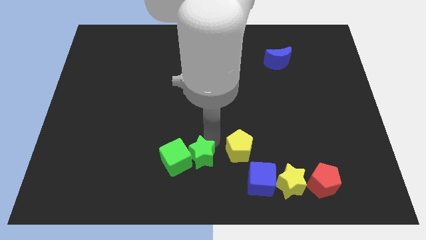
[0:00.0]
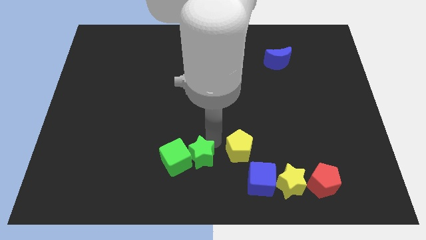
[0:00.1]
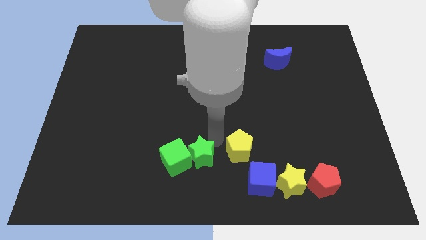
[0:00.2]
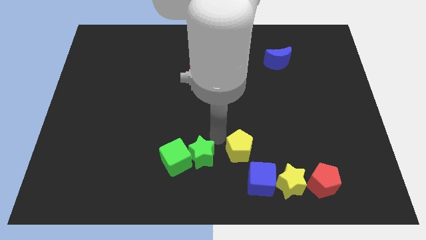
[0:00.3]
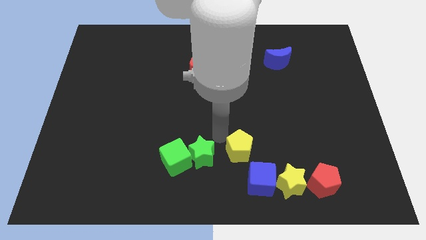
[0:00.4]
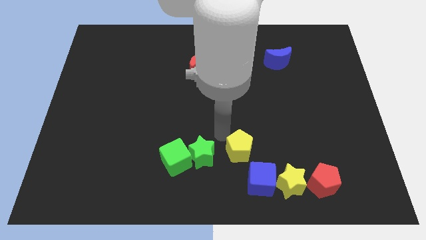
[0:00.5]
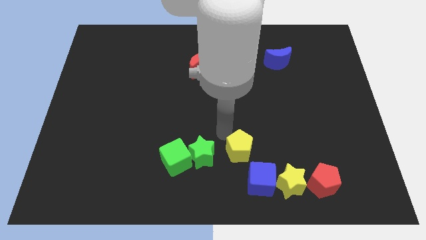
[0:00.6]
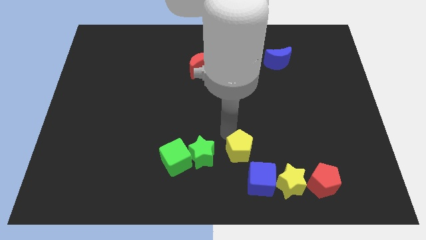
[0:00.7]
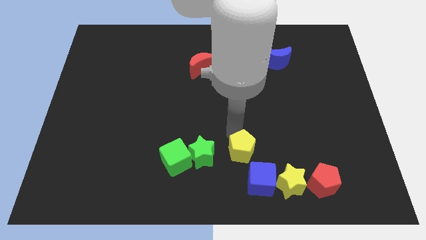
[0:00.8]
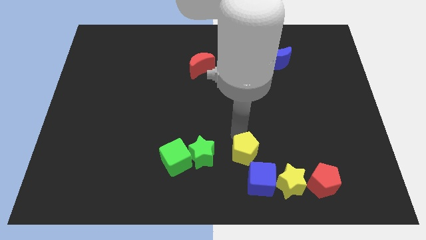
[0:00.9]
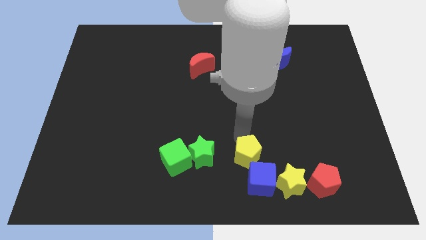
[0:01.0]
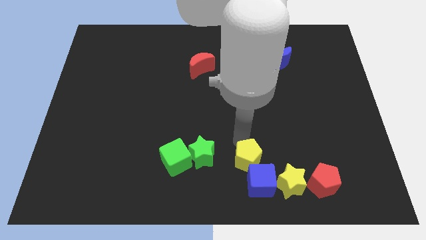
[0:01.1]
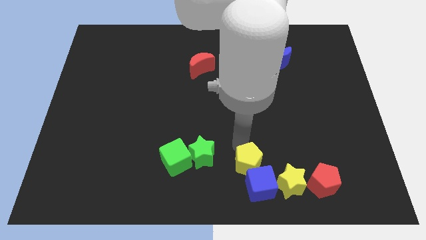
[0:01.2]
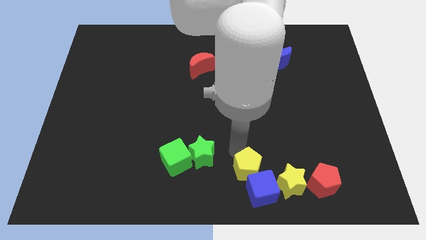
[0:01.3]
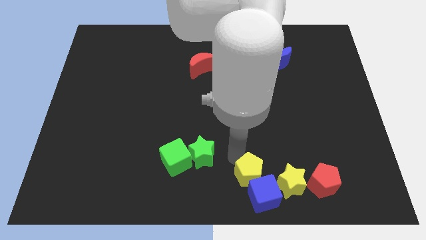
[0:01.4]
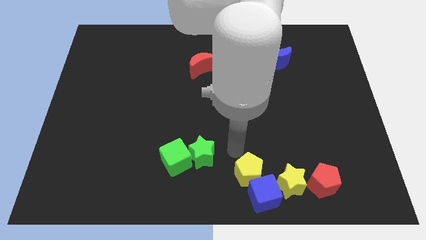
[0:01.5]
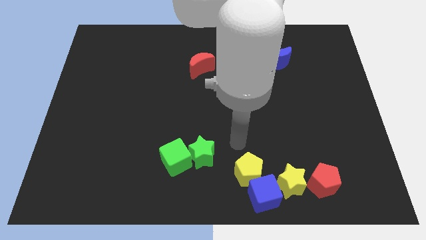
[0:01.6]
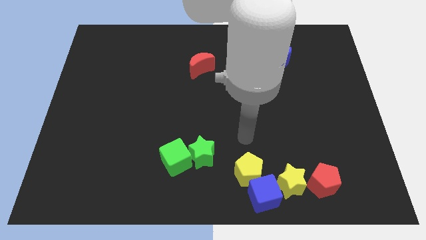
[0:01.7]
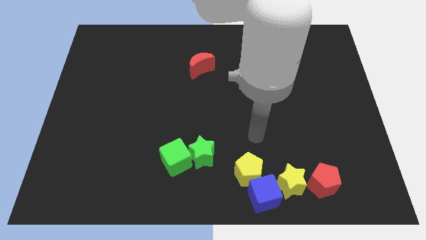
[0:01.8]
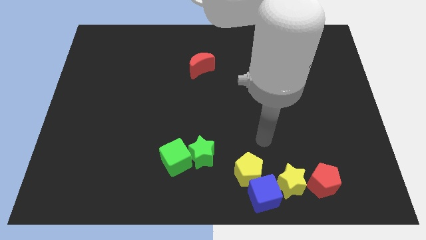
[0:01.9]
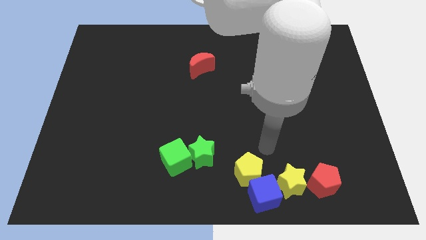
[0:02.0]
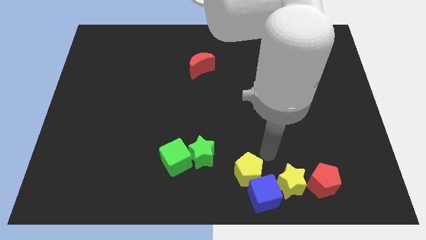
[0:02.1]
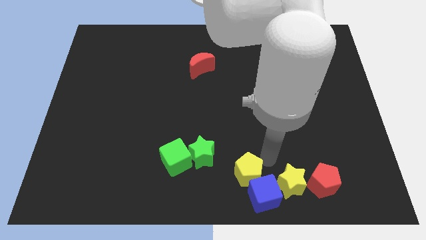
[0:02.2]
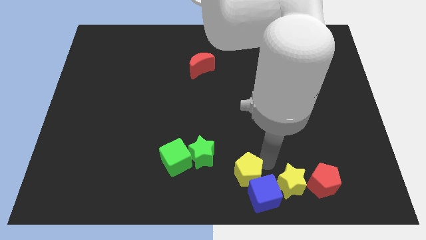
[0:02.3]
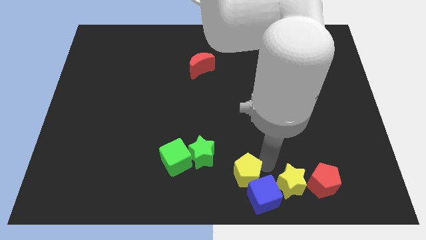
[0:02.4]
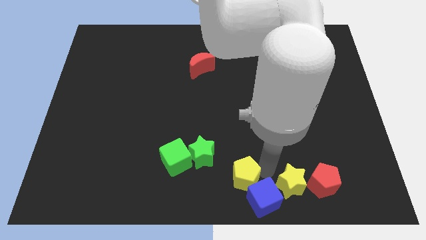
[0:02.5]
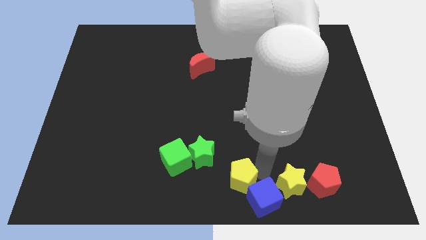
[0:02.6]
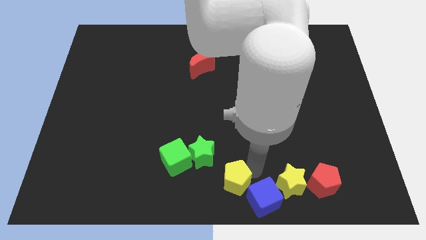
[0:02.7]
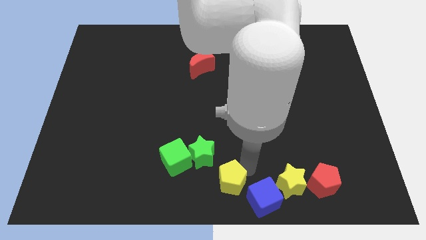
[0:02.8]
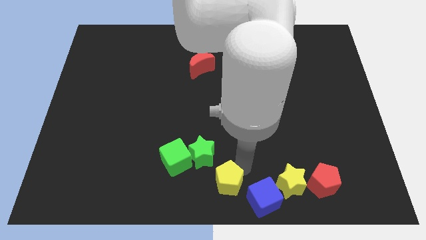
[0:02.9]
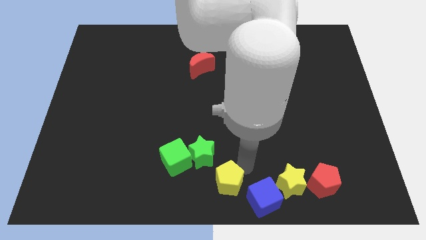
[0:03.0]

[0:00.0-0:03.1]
push the blue cube with the yellow pentagon

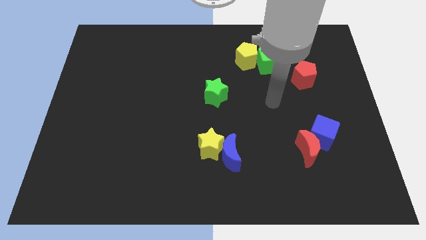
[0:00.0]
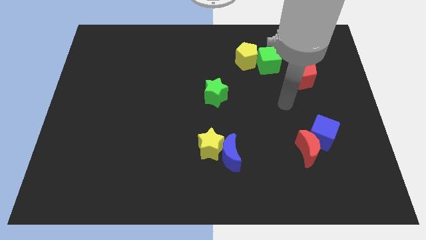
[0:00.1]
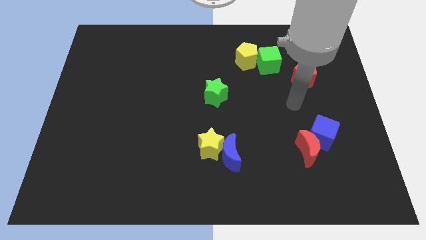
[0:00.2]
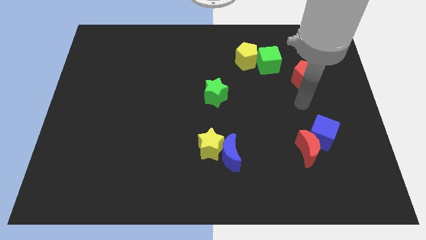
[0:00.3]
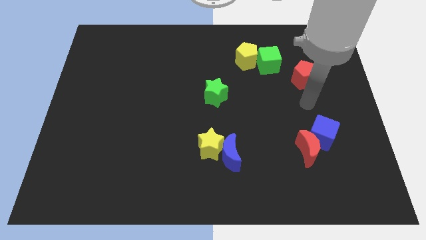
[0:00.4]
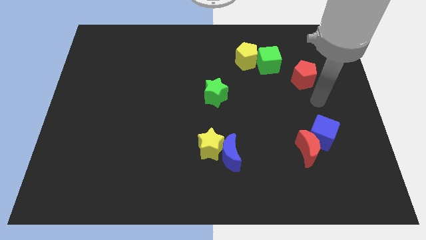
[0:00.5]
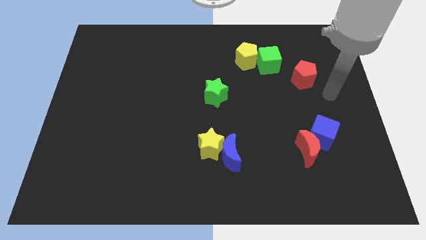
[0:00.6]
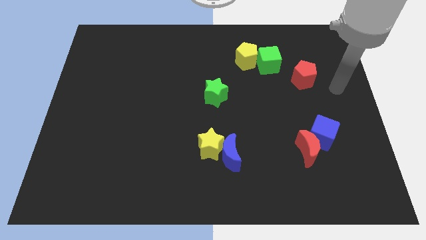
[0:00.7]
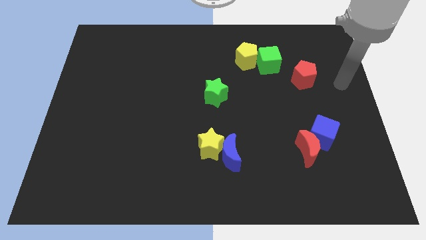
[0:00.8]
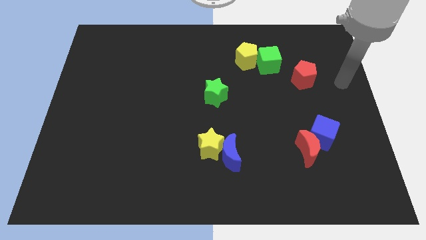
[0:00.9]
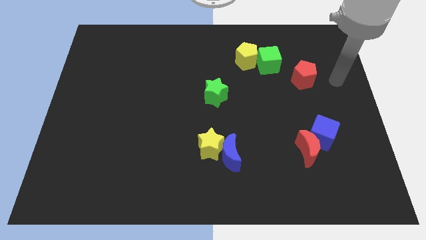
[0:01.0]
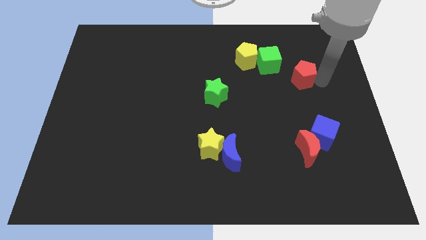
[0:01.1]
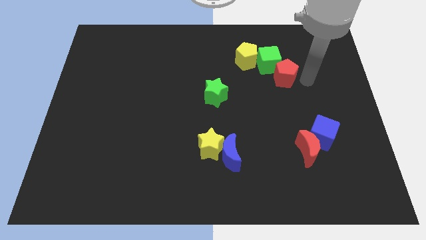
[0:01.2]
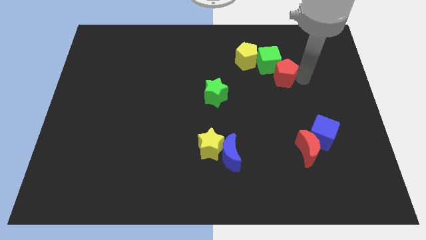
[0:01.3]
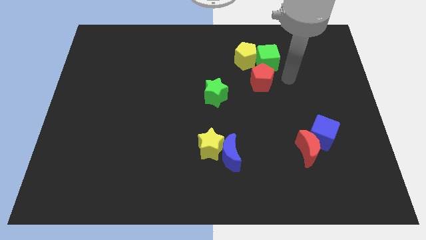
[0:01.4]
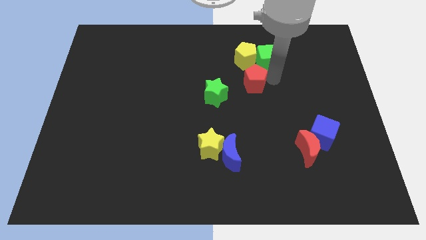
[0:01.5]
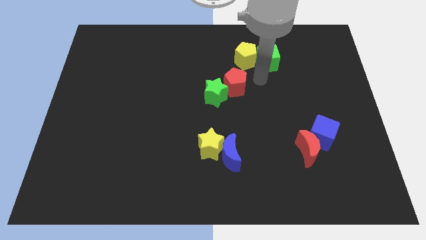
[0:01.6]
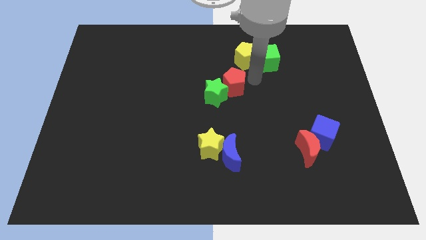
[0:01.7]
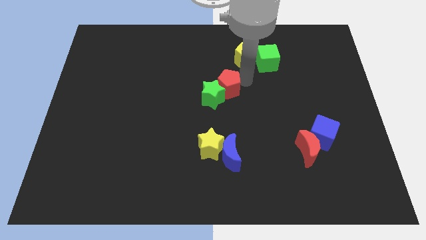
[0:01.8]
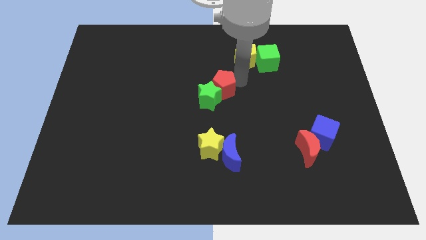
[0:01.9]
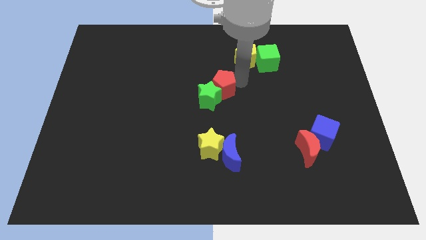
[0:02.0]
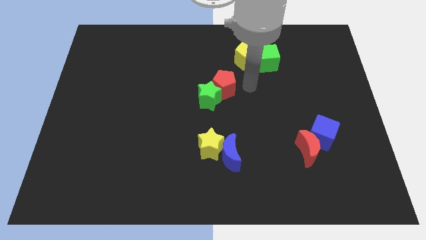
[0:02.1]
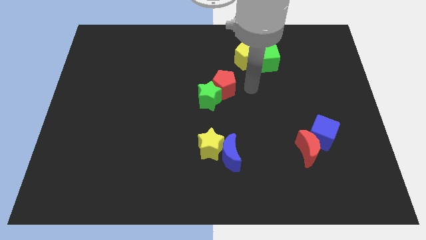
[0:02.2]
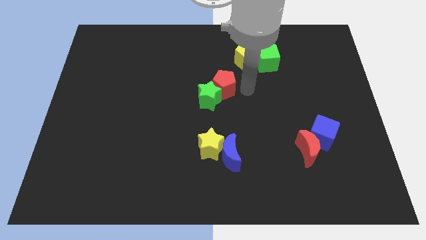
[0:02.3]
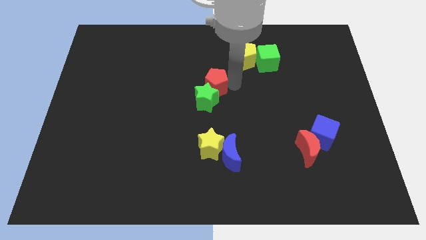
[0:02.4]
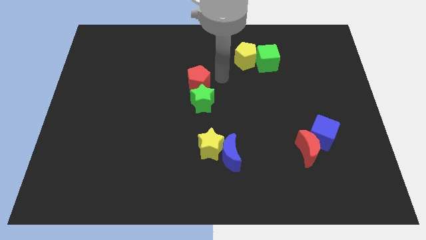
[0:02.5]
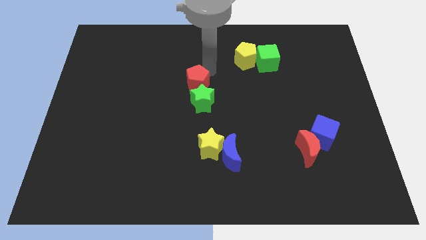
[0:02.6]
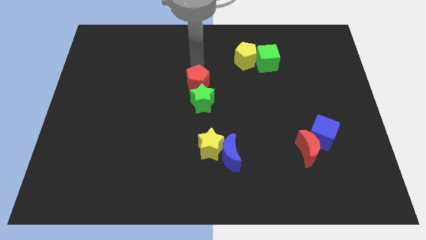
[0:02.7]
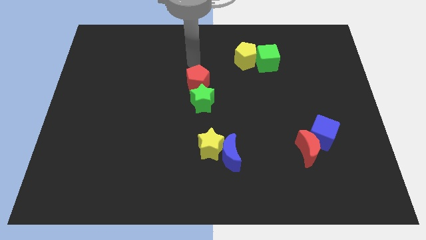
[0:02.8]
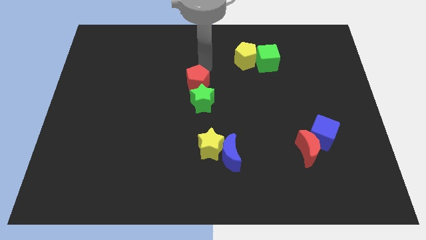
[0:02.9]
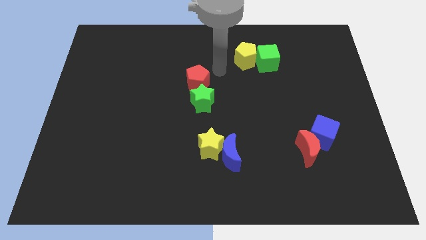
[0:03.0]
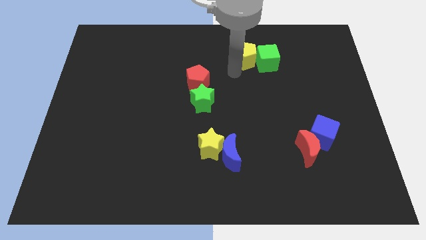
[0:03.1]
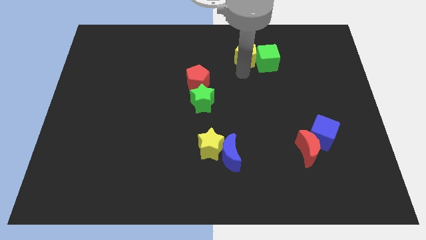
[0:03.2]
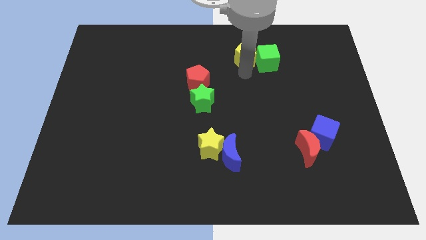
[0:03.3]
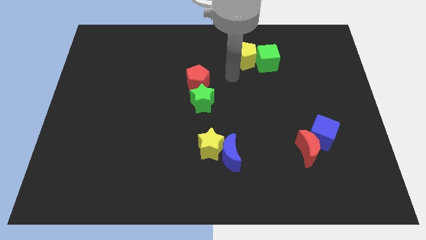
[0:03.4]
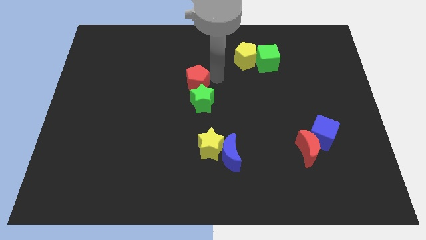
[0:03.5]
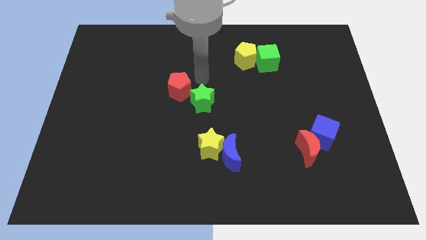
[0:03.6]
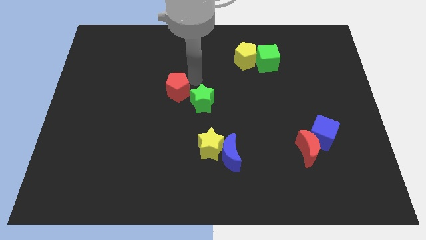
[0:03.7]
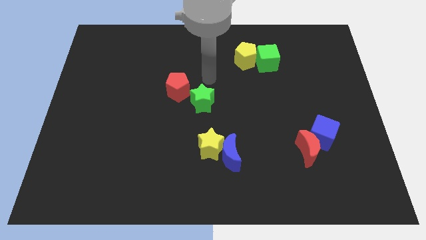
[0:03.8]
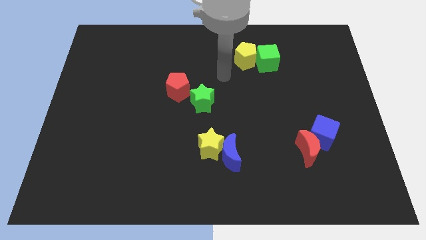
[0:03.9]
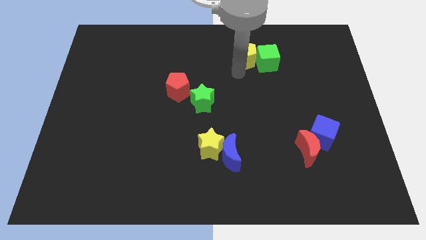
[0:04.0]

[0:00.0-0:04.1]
push the red pentagon to the left side of the board

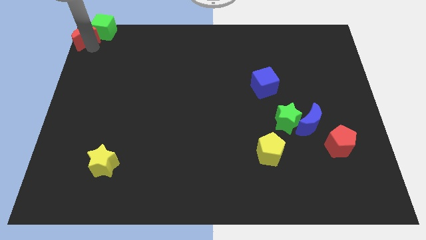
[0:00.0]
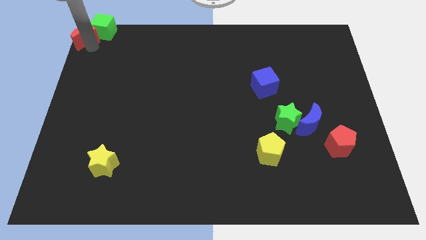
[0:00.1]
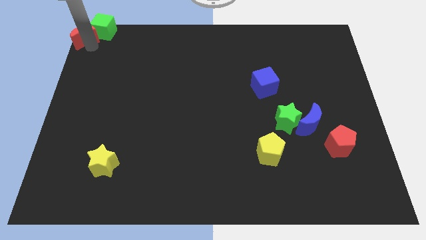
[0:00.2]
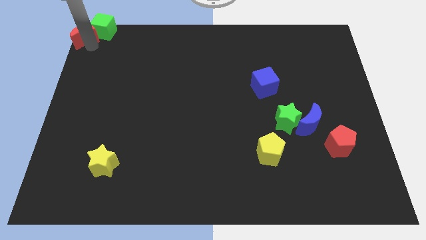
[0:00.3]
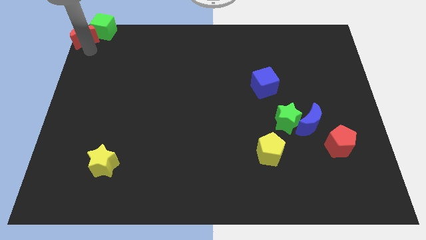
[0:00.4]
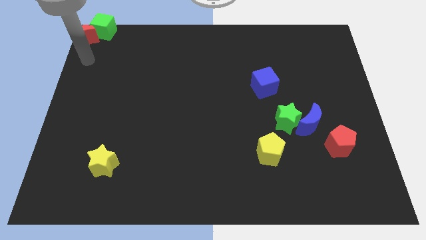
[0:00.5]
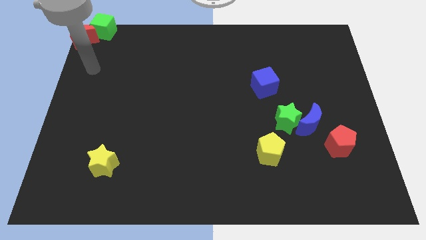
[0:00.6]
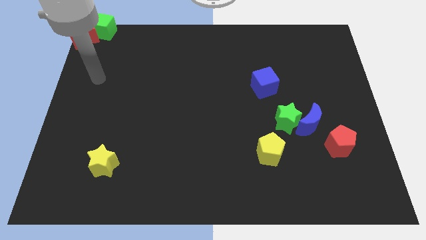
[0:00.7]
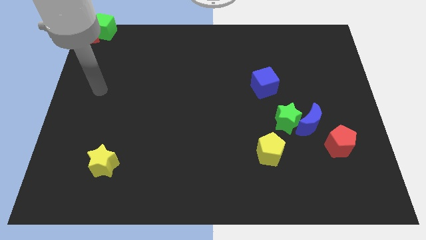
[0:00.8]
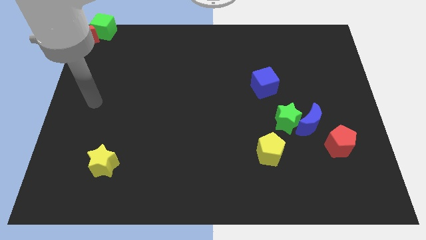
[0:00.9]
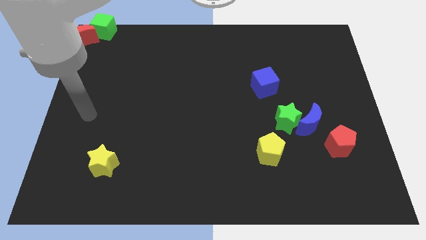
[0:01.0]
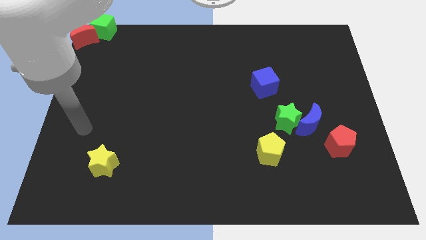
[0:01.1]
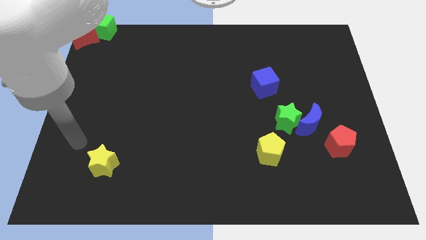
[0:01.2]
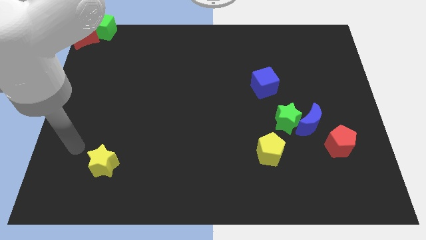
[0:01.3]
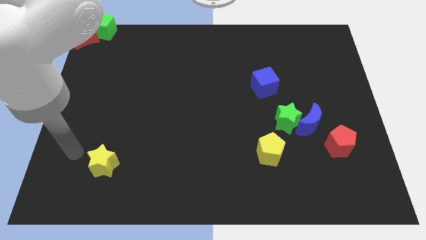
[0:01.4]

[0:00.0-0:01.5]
move arm away from red crescent

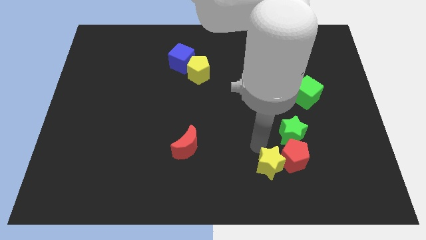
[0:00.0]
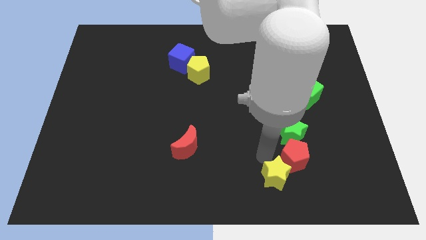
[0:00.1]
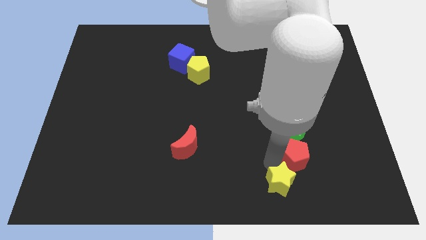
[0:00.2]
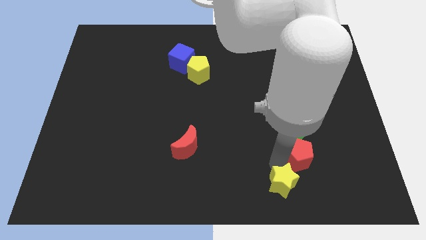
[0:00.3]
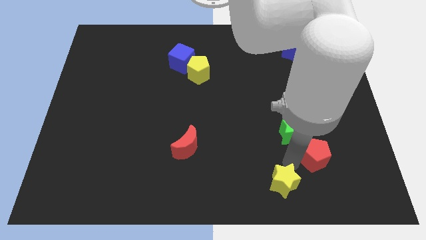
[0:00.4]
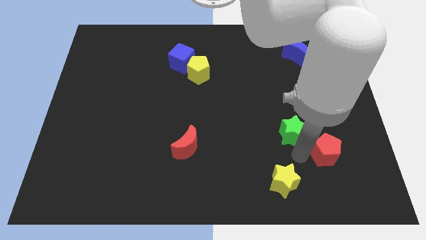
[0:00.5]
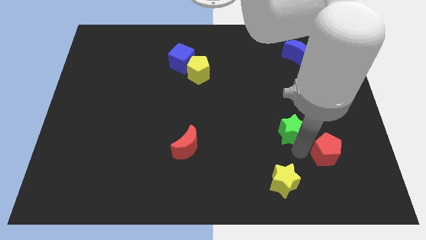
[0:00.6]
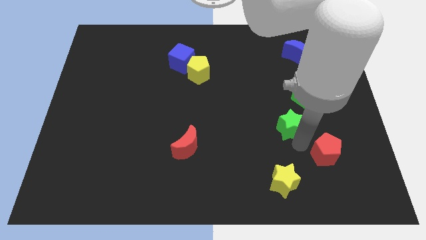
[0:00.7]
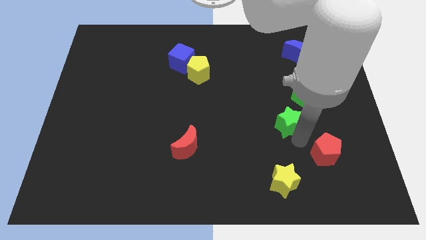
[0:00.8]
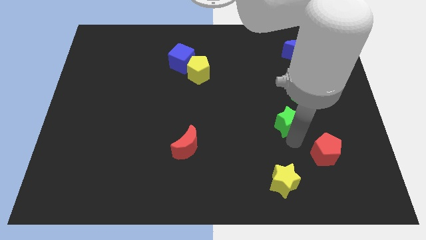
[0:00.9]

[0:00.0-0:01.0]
separate the red pentagon and the yellow star
